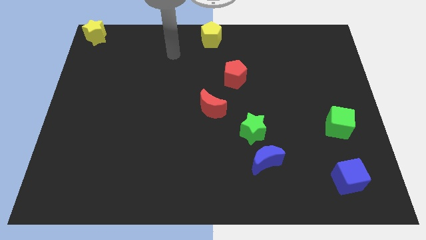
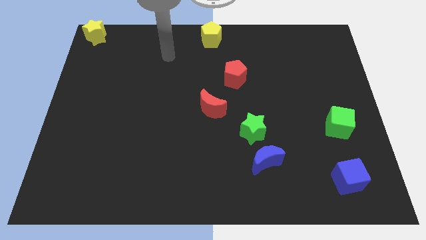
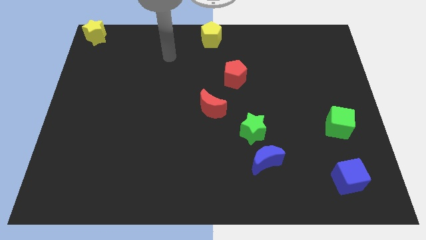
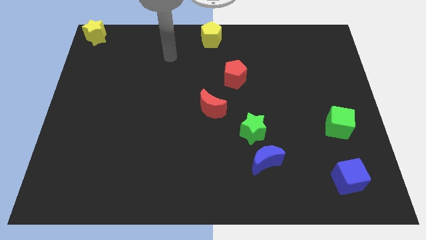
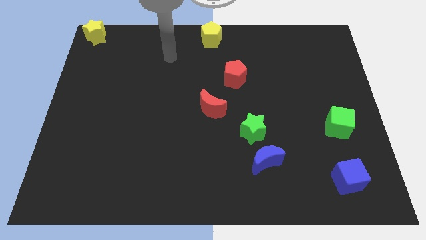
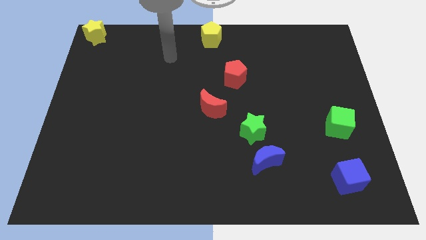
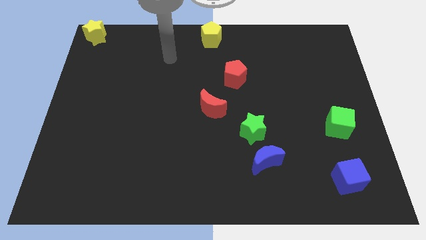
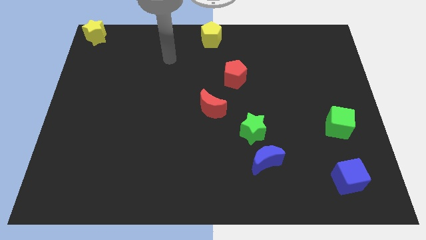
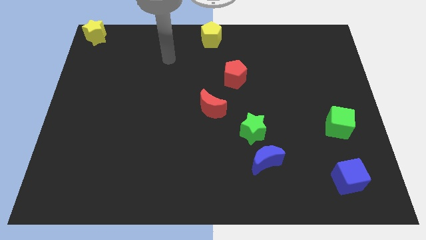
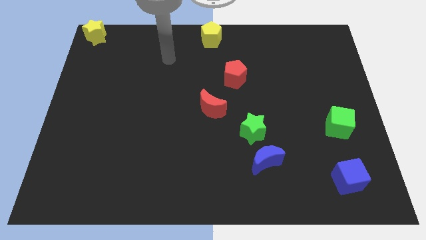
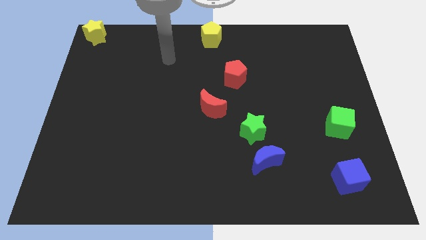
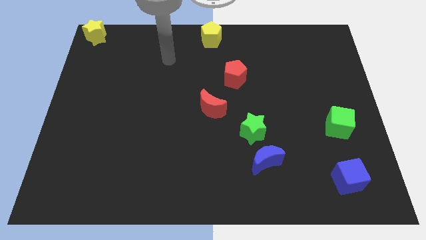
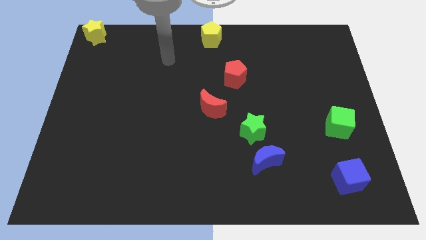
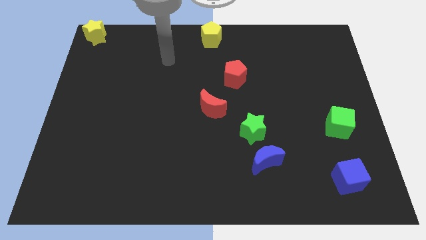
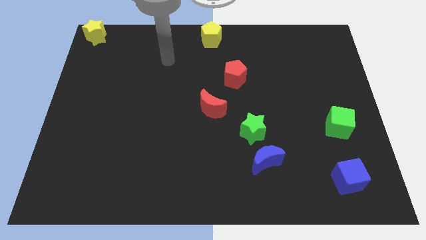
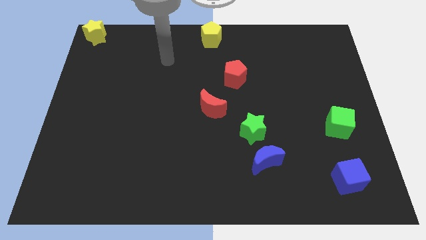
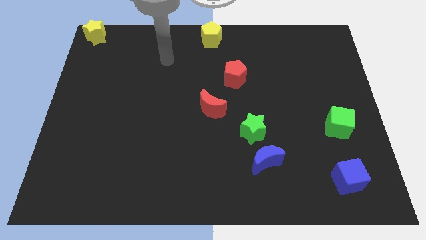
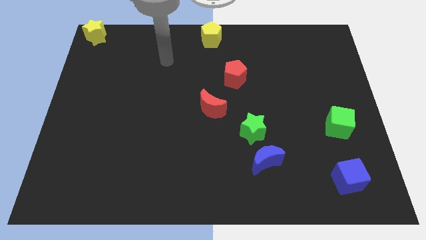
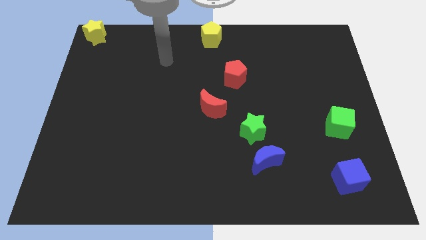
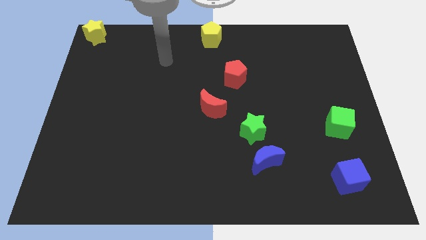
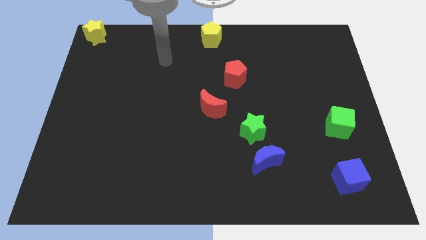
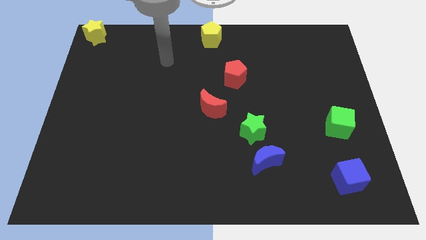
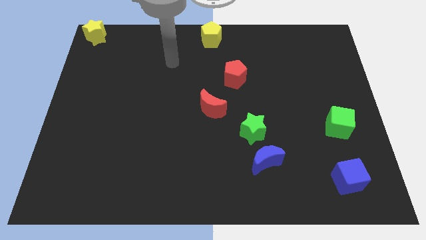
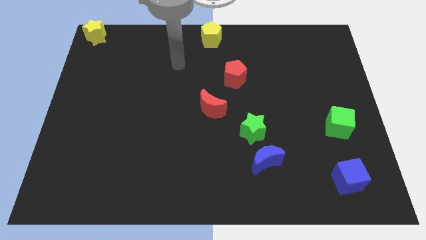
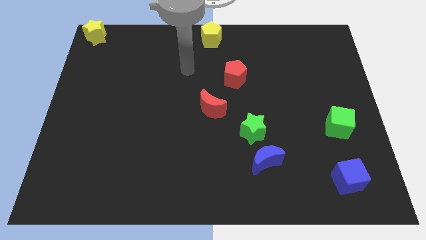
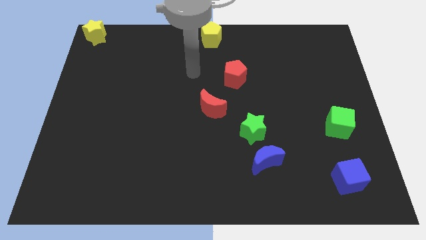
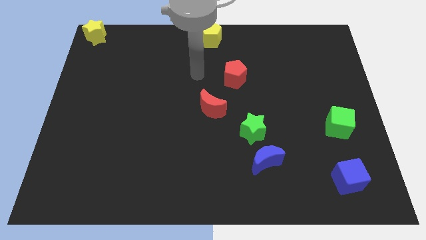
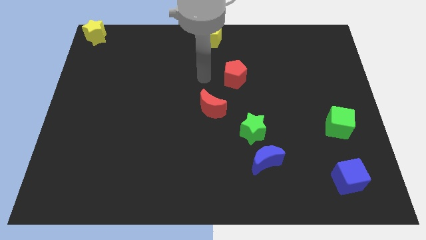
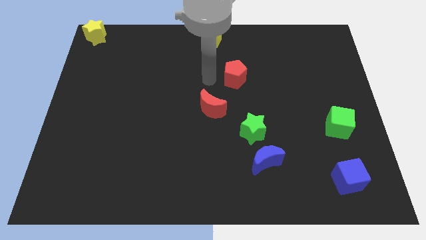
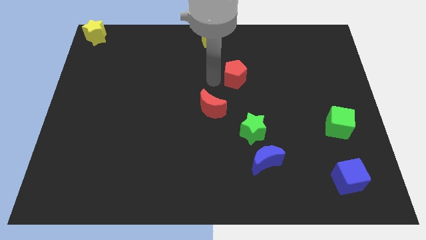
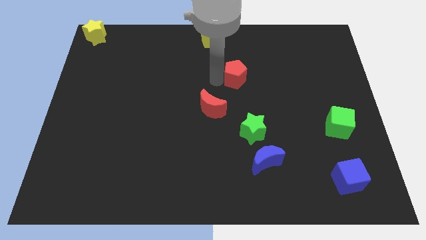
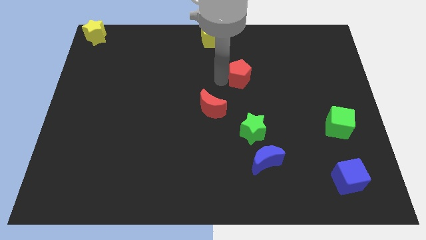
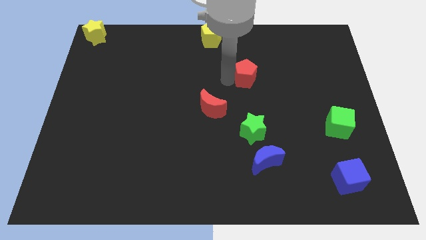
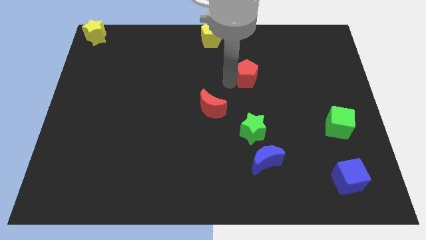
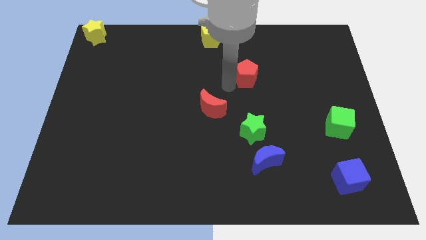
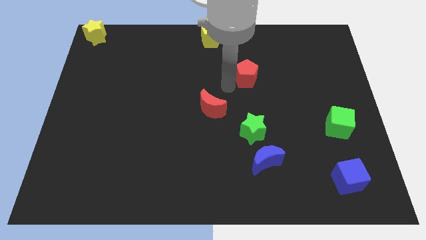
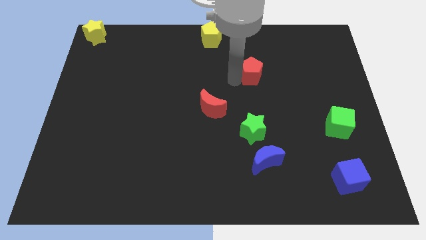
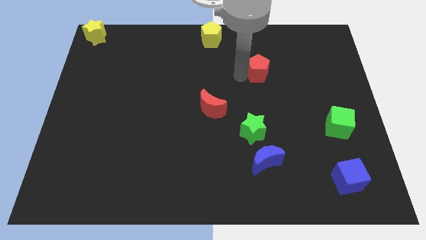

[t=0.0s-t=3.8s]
put the red pentagon vertically above the green star

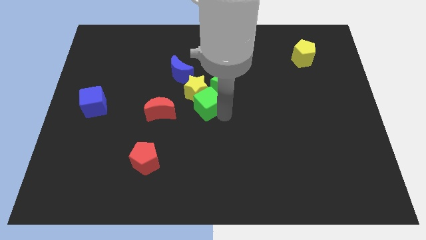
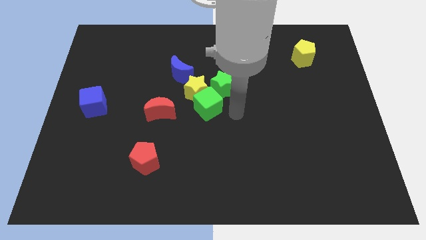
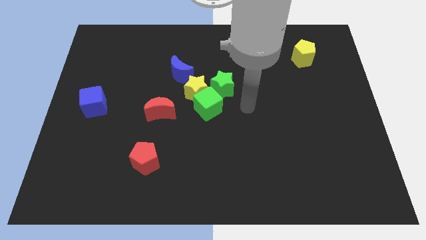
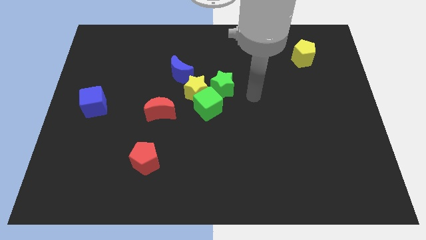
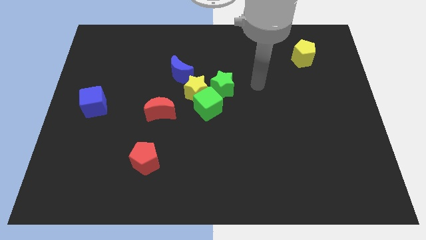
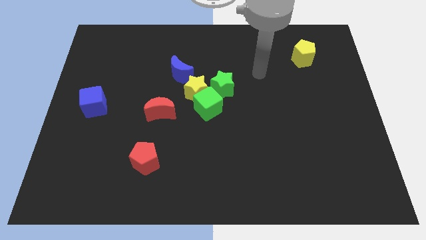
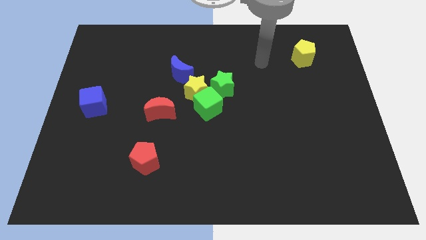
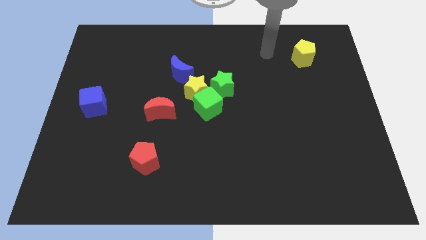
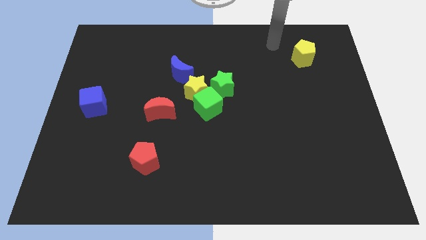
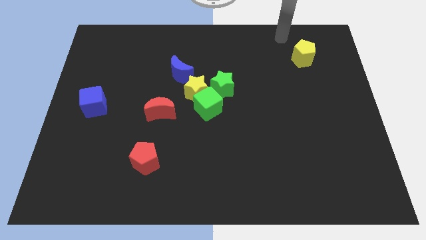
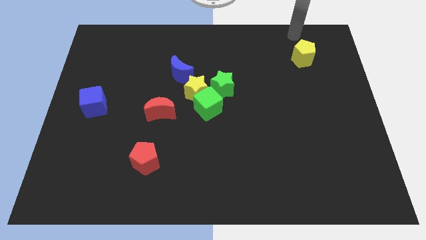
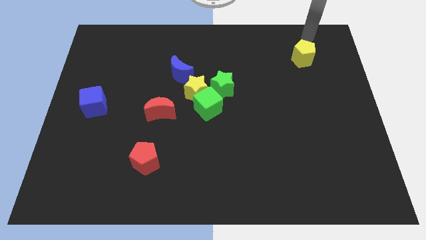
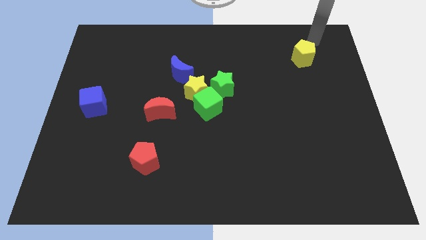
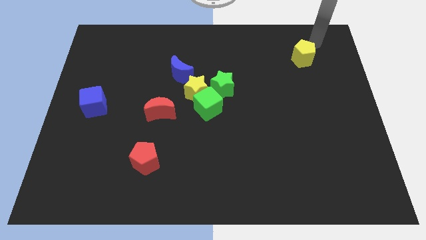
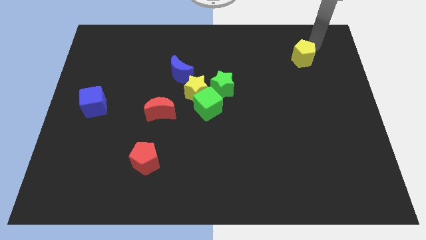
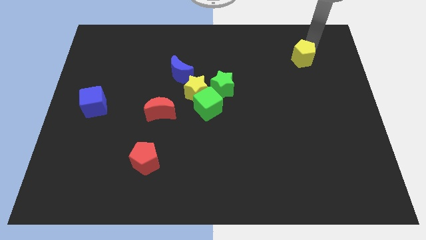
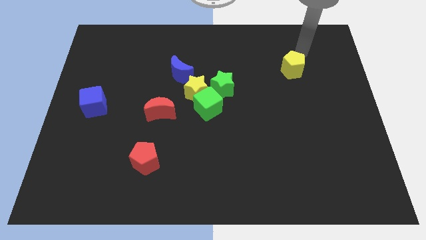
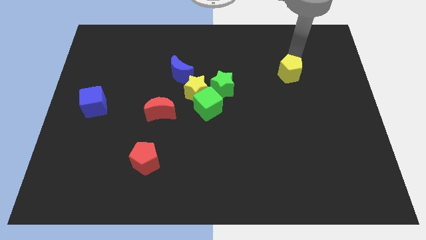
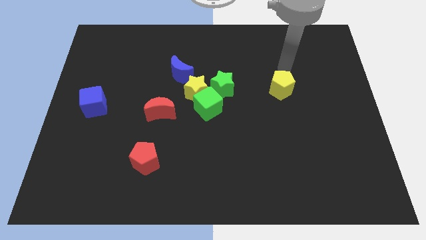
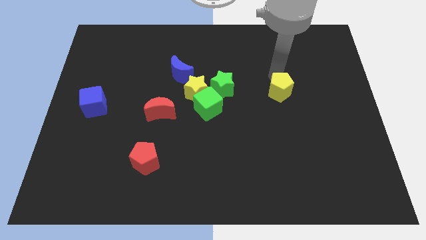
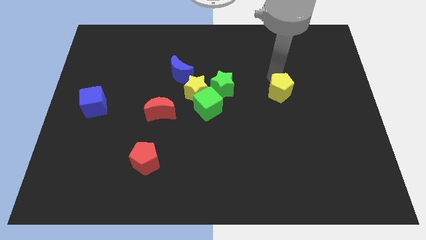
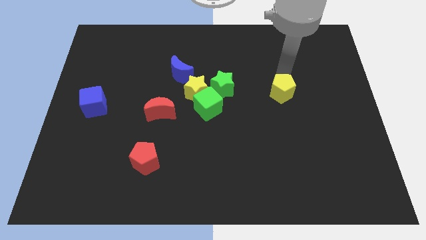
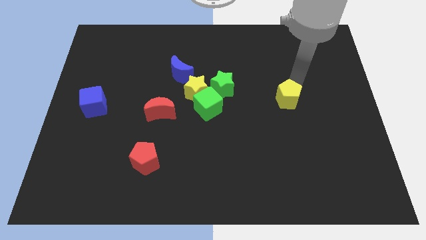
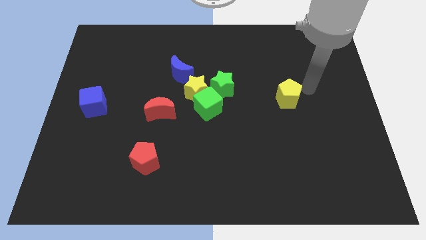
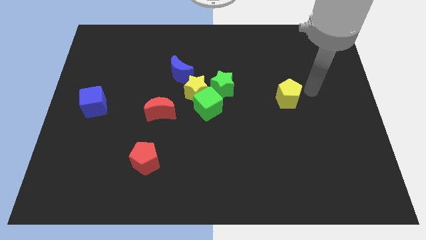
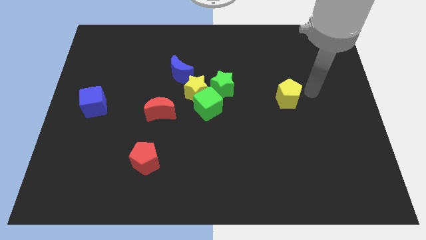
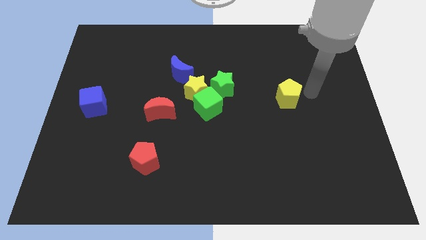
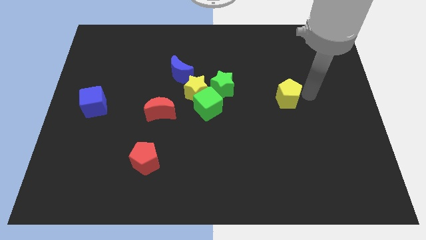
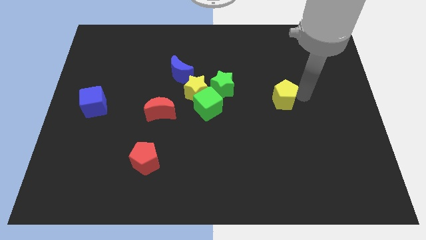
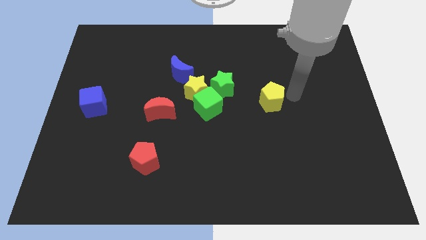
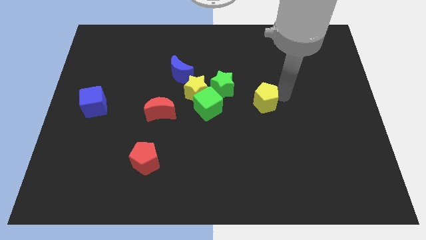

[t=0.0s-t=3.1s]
move yellow pentagon towards green cube

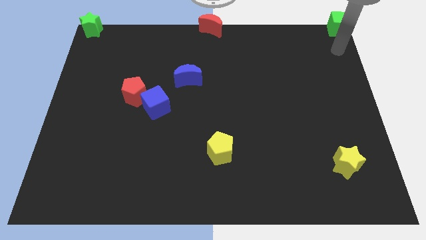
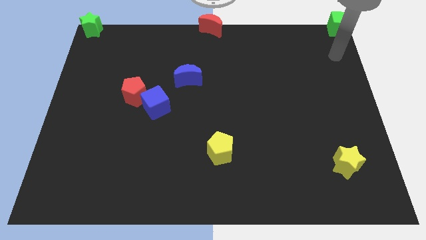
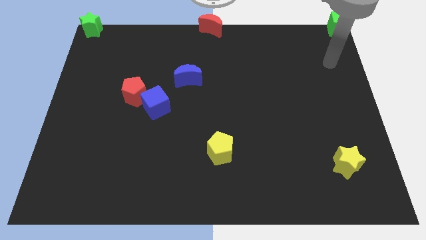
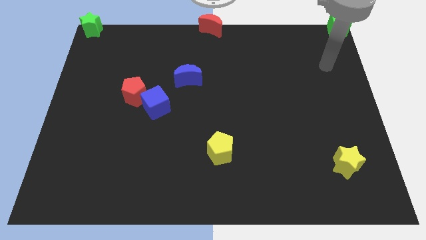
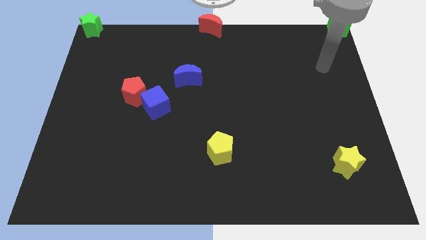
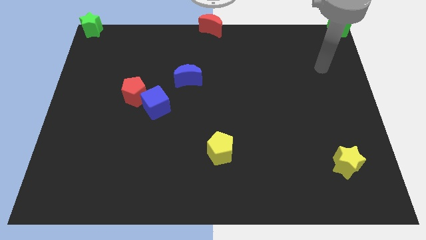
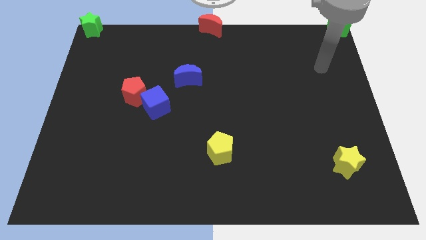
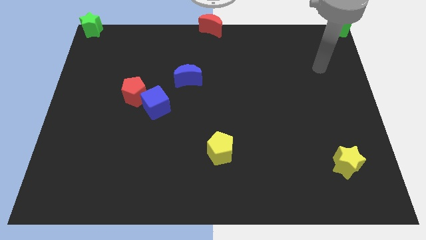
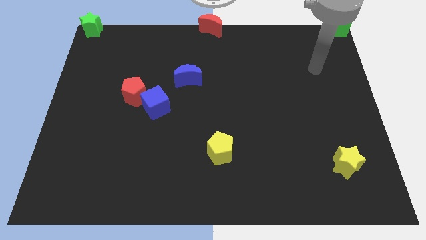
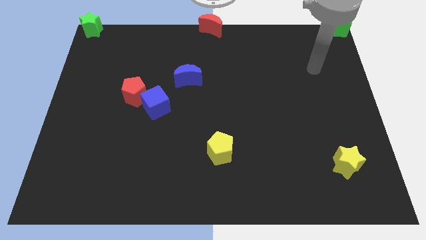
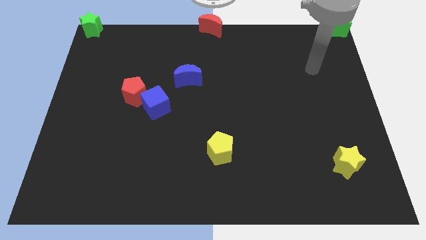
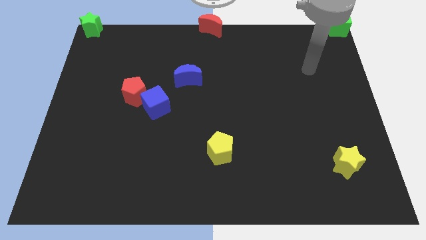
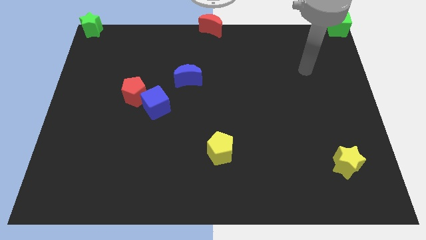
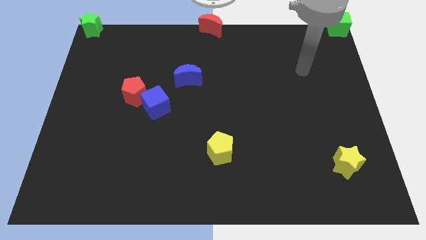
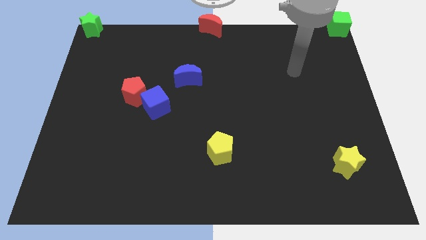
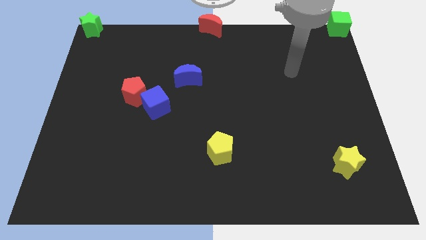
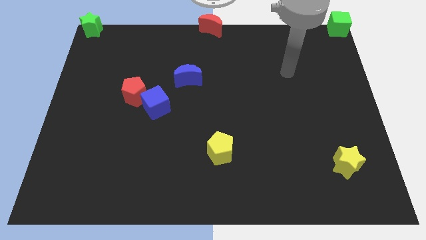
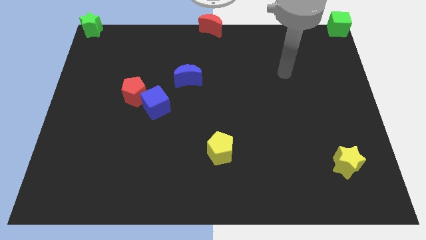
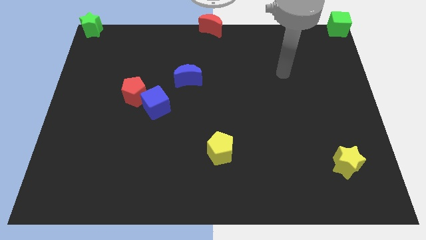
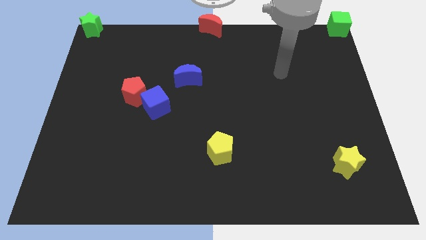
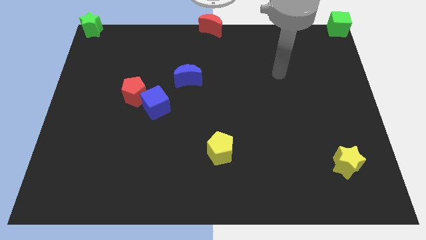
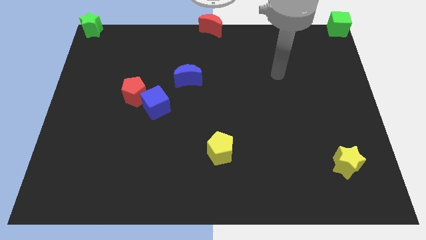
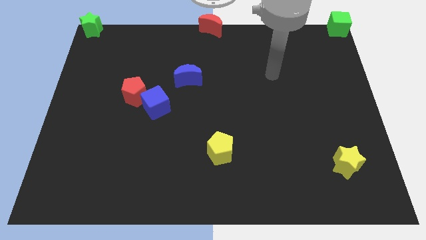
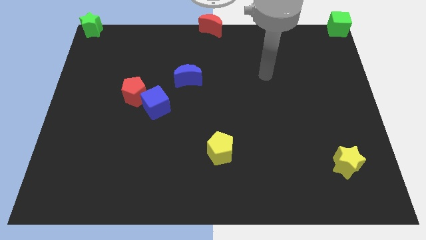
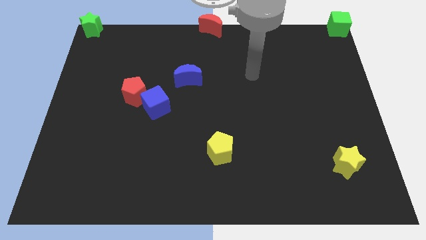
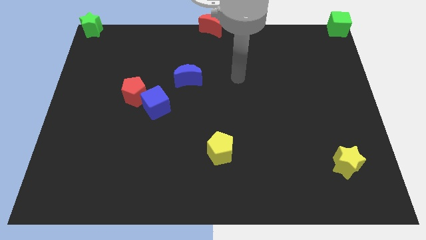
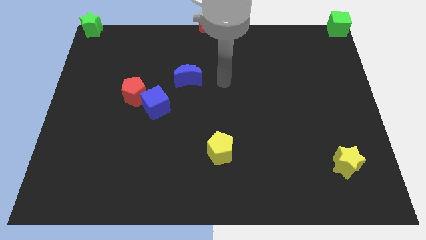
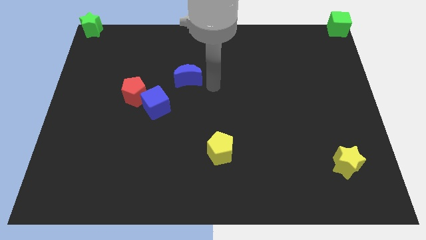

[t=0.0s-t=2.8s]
point your arm at the right of the blue crescent
